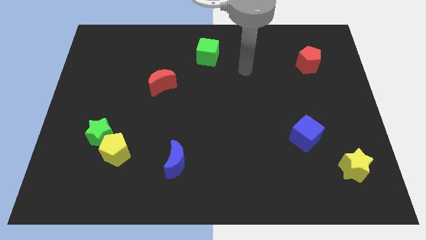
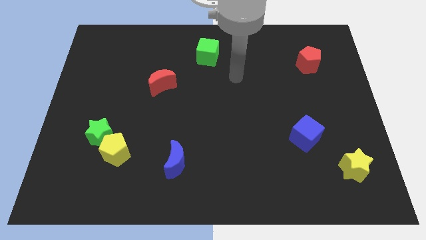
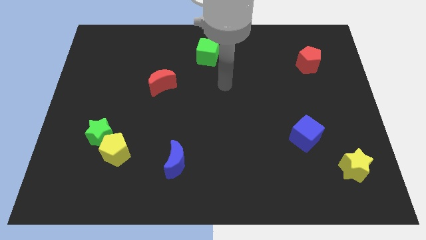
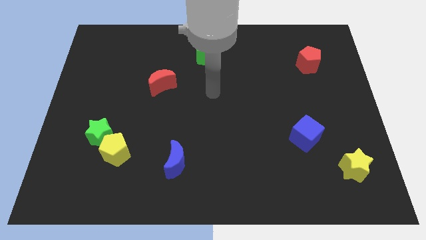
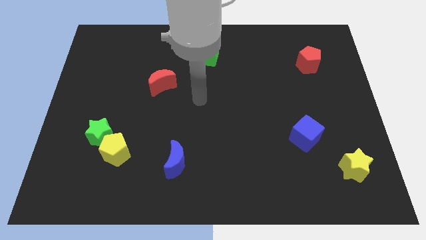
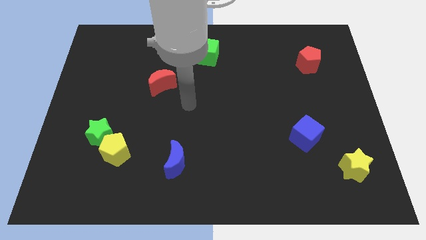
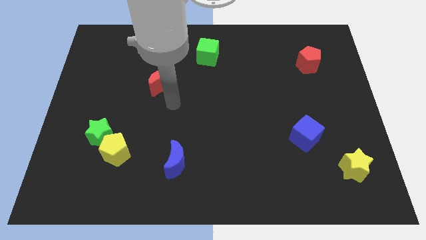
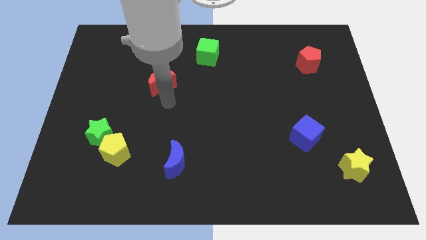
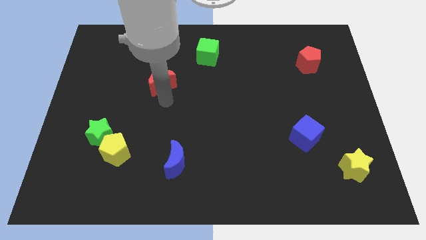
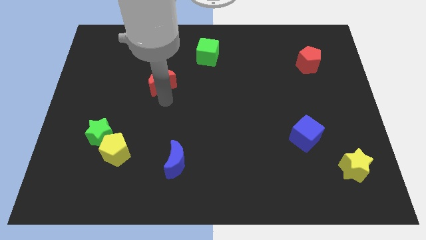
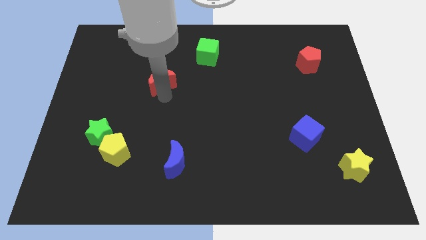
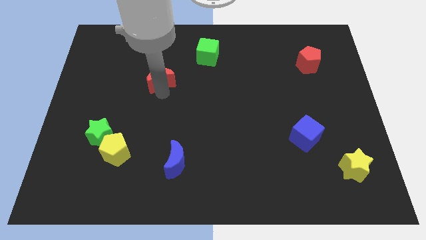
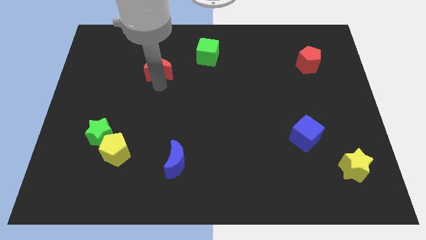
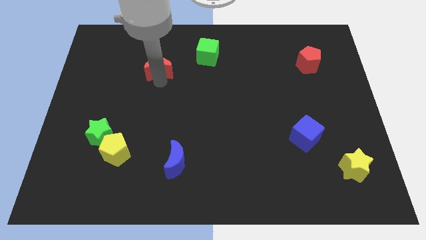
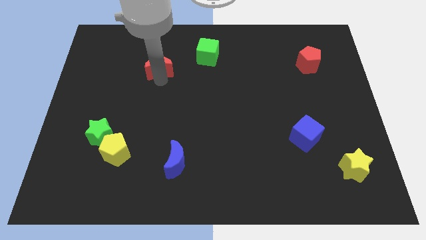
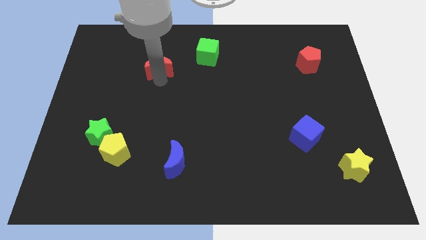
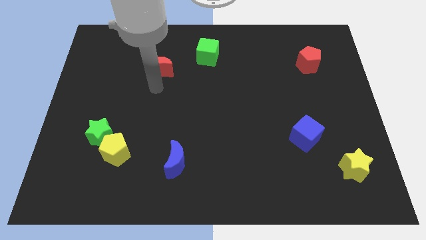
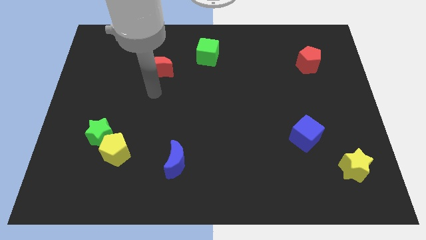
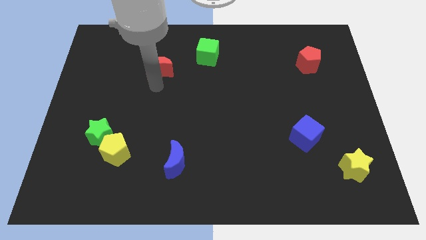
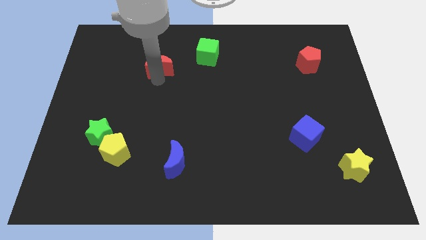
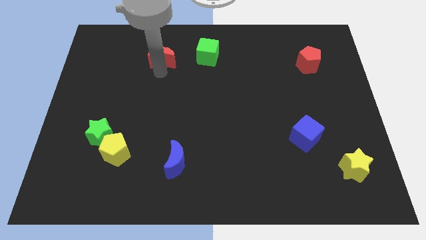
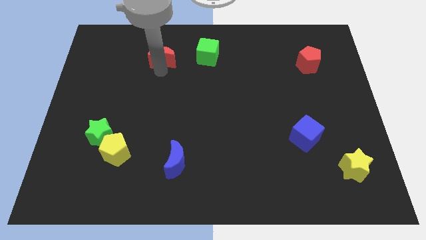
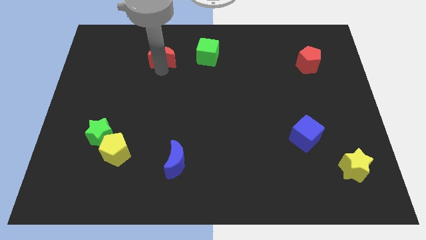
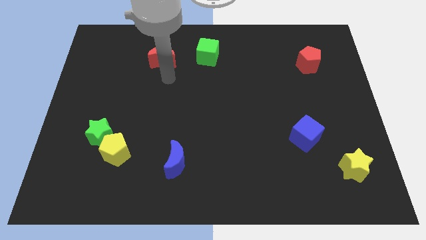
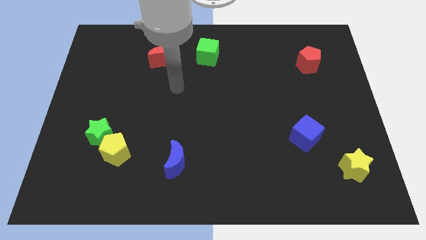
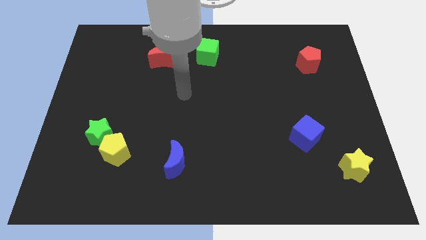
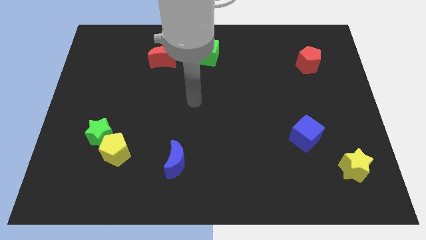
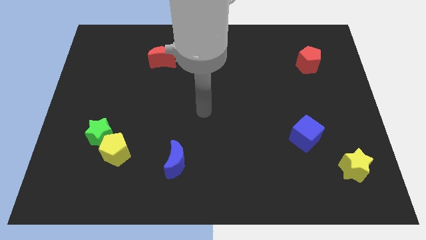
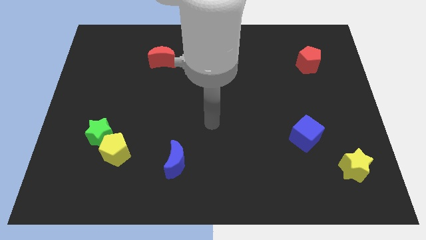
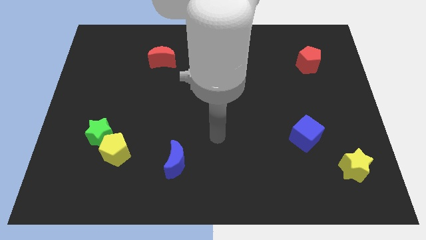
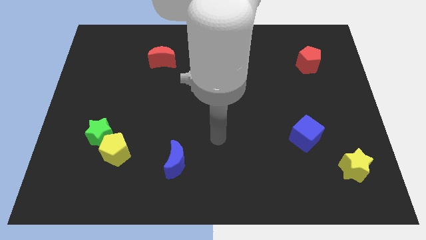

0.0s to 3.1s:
move the red crescent to the left of the green cube

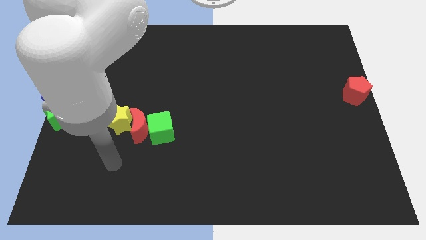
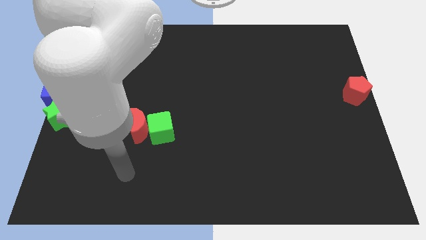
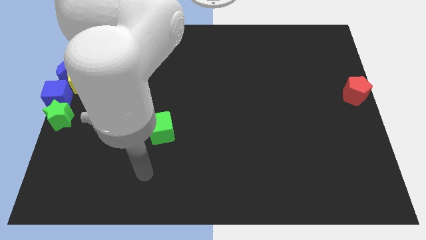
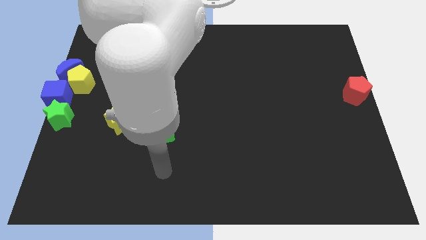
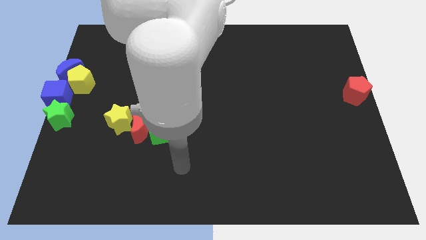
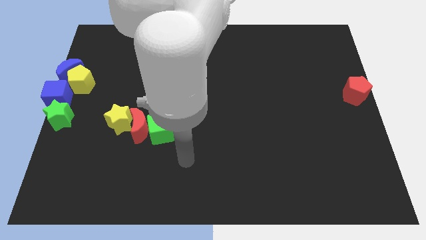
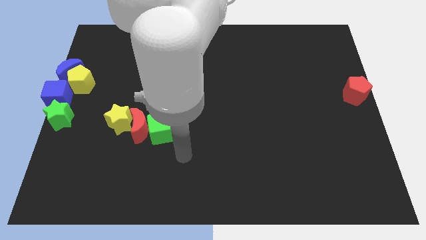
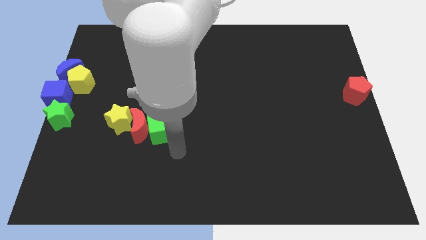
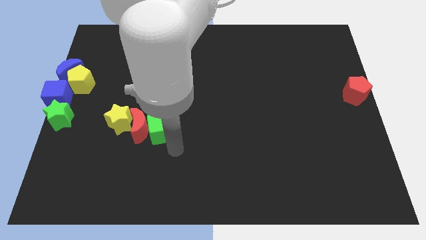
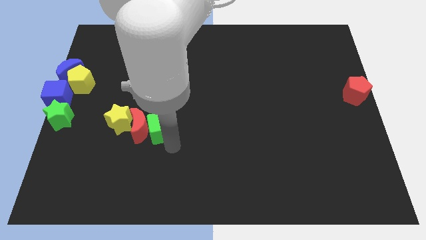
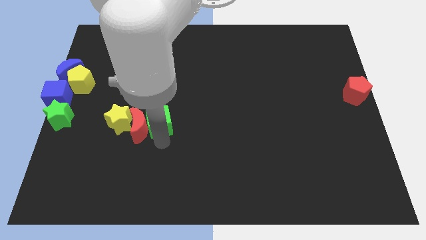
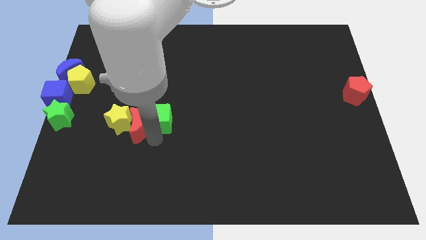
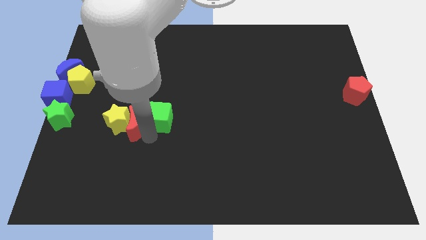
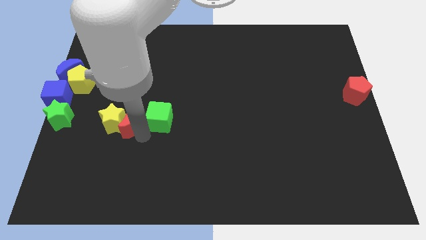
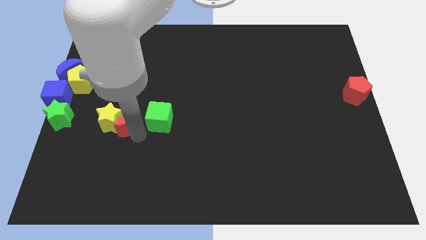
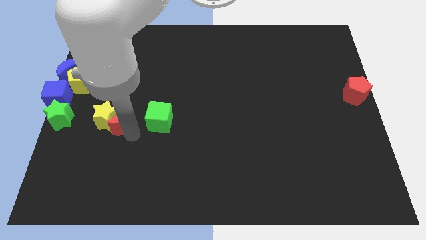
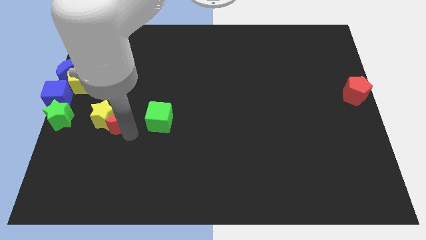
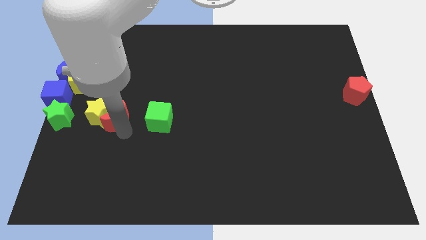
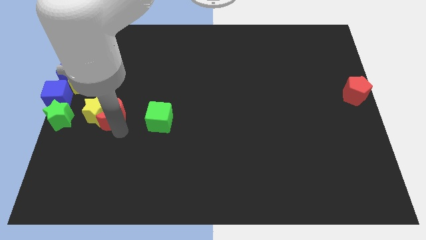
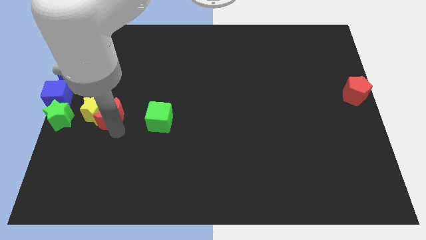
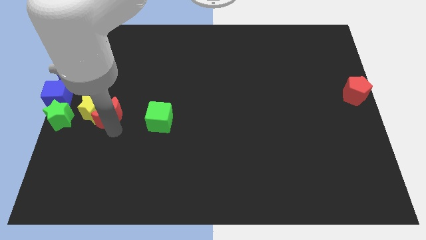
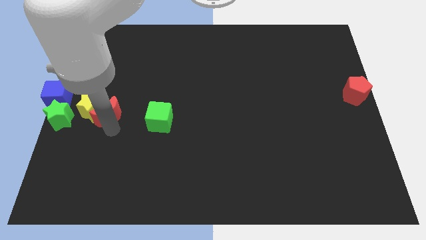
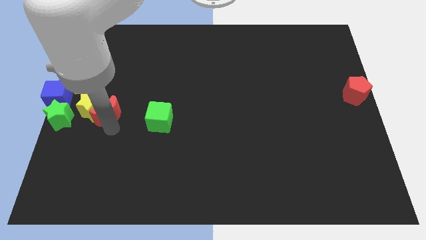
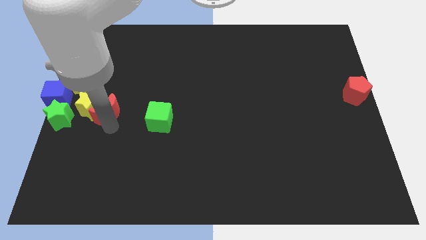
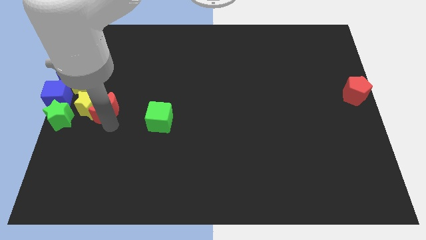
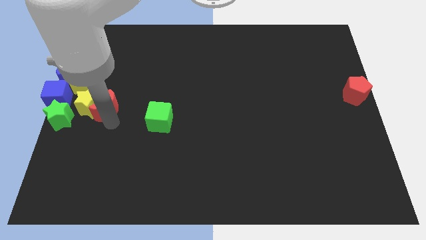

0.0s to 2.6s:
separate the red moon from the green cube

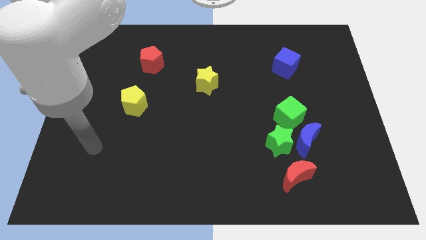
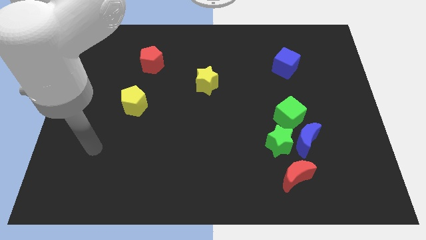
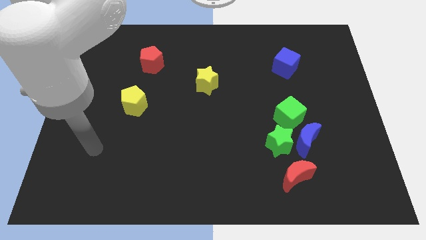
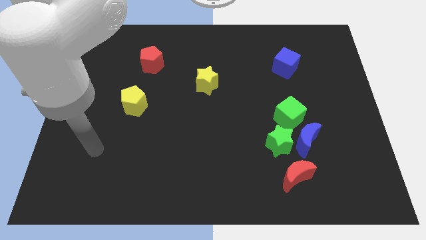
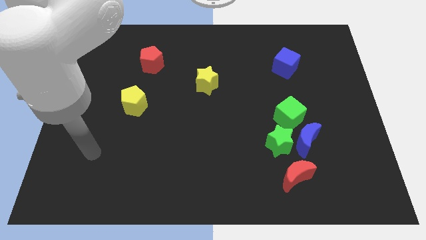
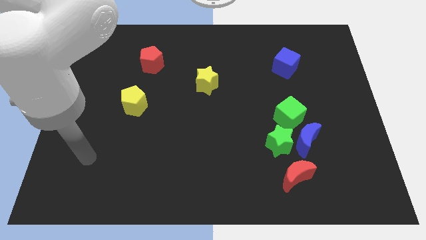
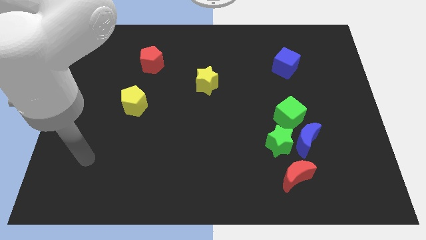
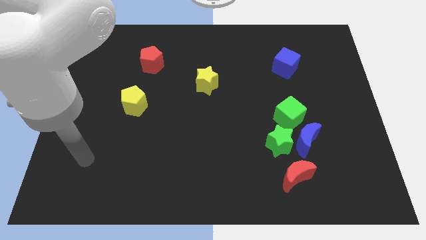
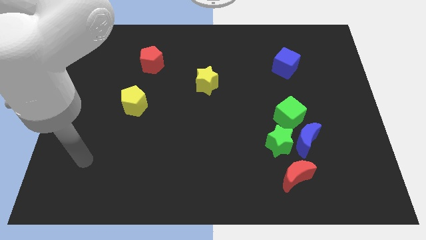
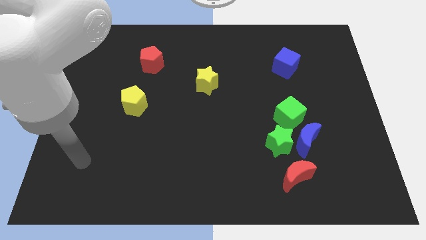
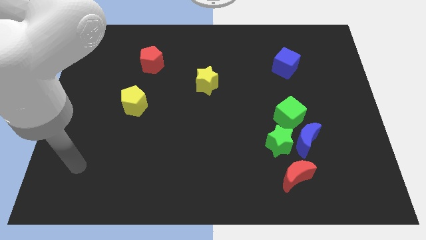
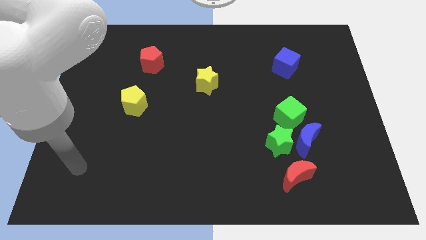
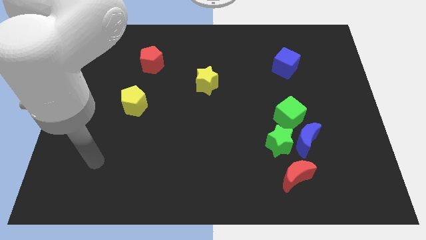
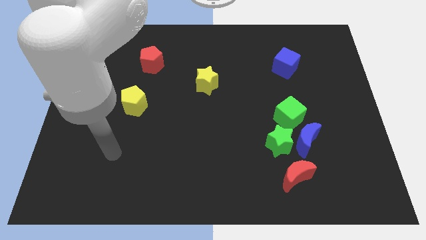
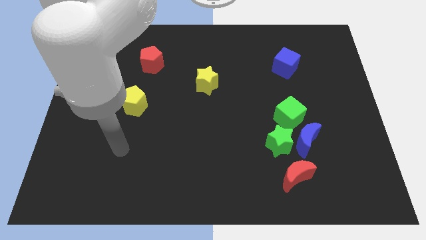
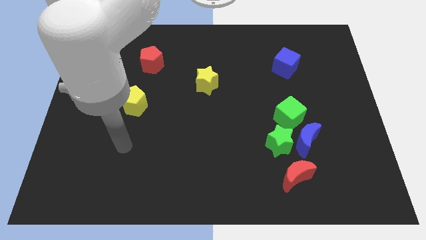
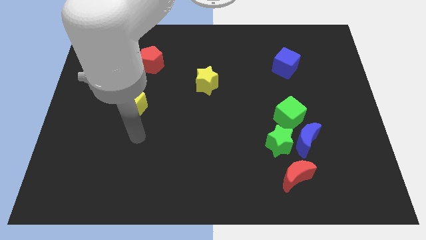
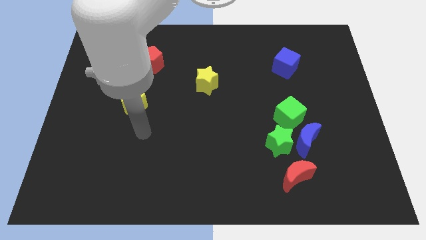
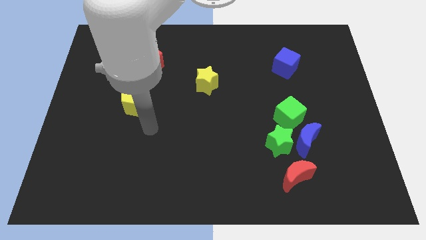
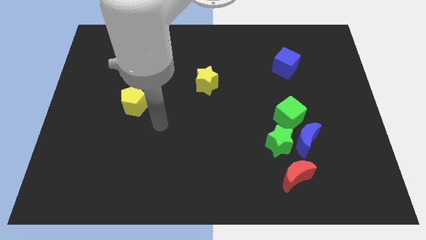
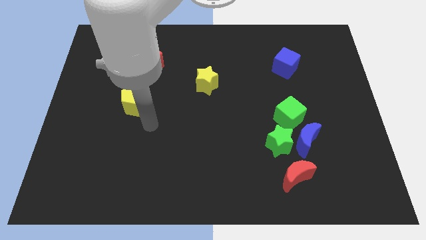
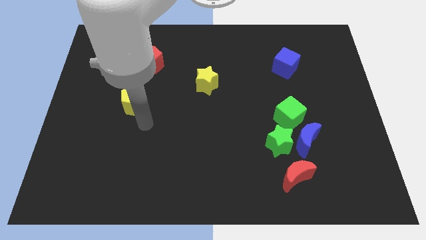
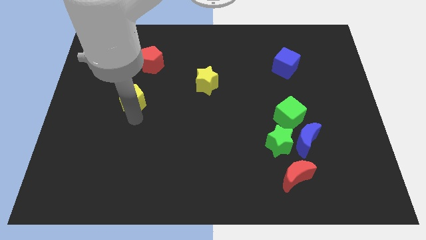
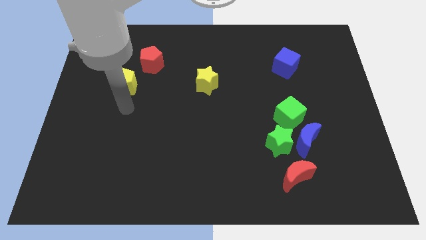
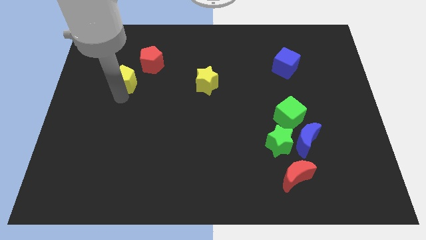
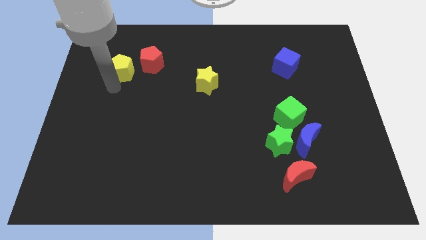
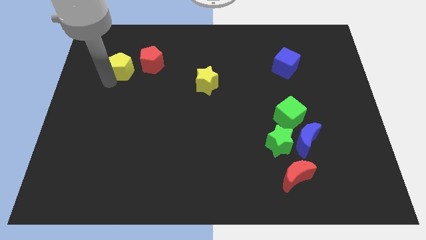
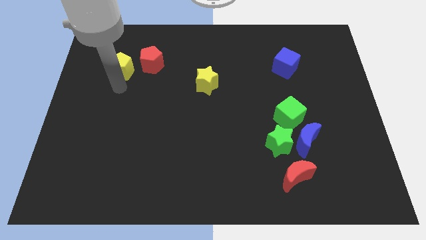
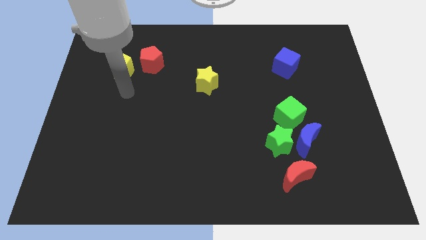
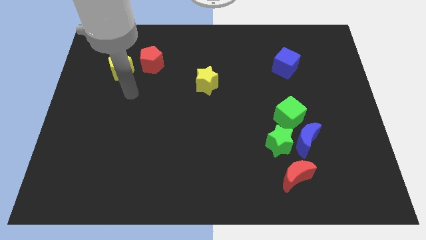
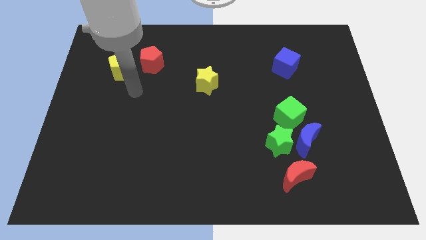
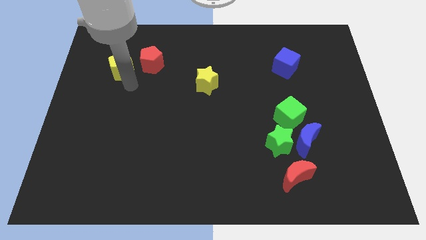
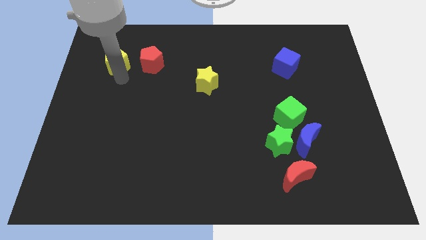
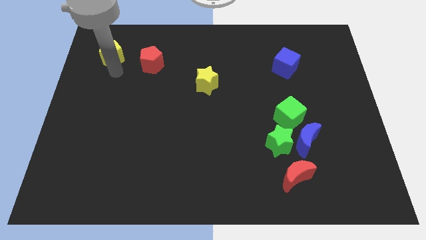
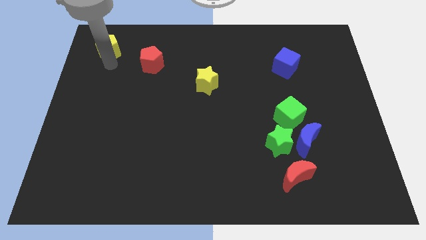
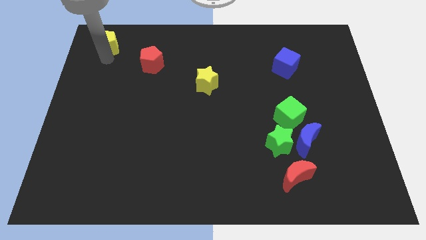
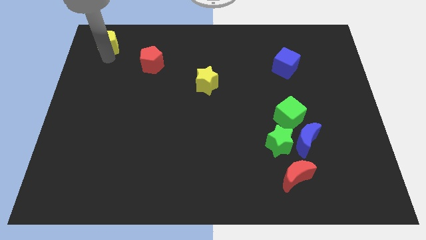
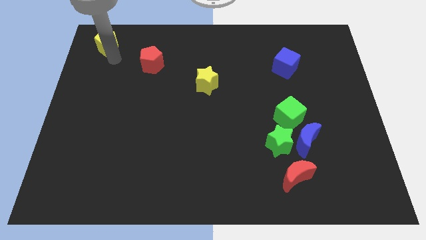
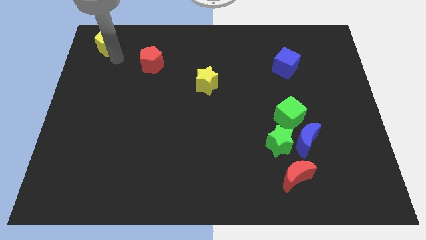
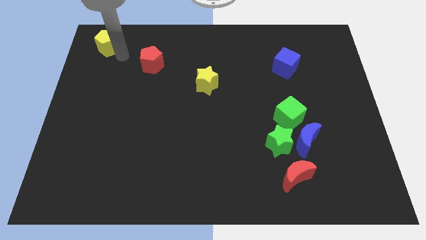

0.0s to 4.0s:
place the yellow pentagon diagonally top left to red pentagon
